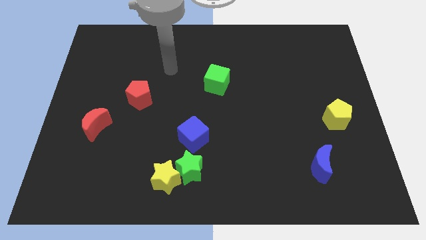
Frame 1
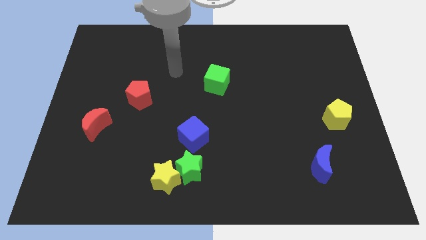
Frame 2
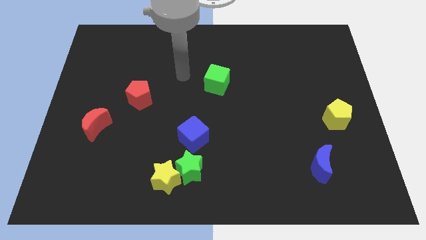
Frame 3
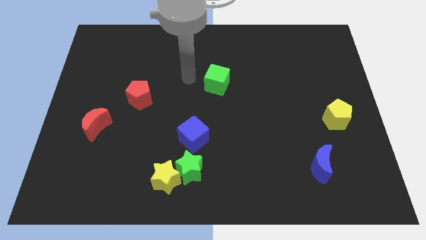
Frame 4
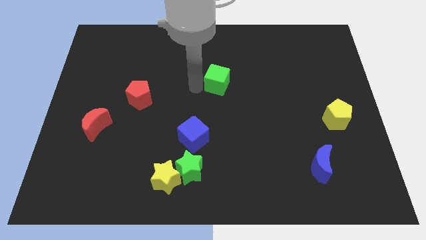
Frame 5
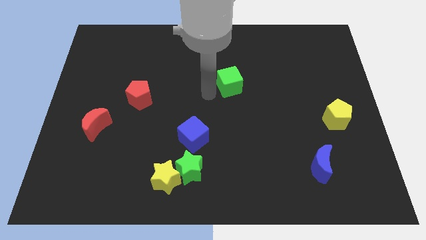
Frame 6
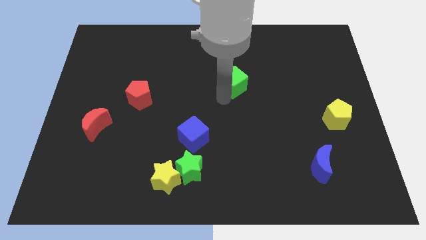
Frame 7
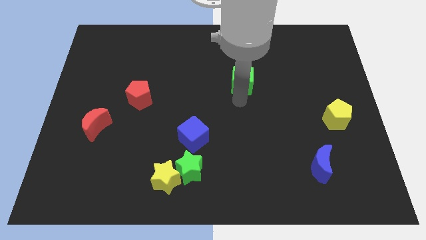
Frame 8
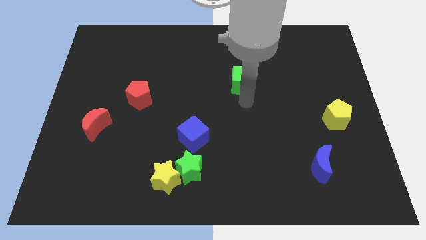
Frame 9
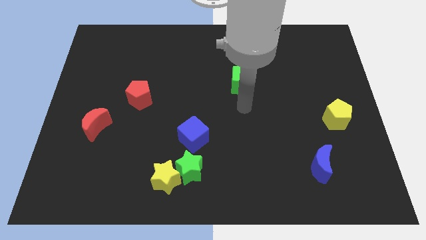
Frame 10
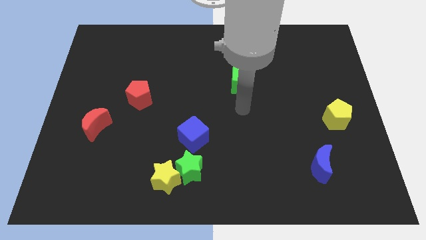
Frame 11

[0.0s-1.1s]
slightly push the green cube towards the right side of the board

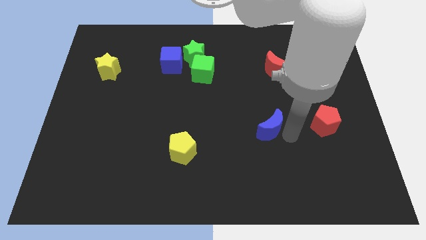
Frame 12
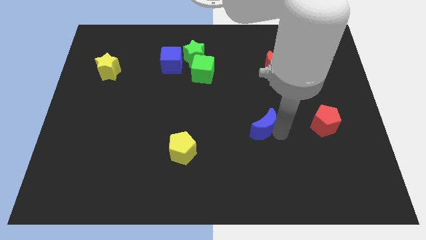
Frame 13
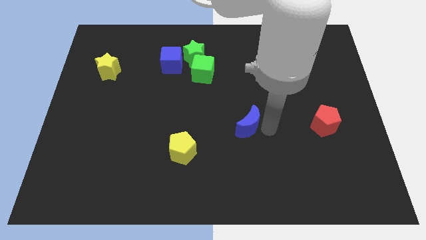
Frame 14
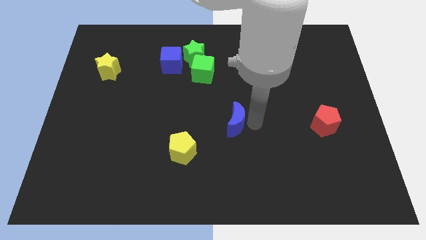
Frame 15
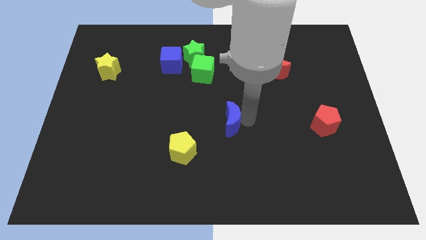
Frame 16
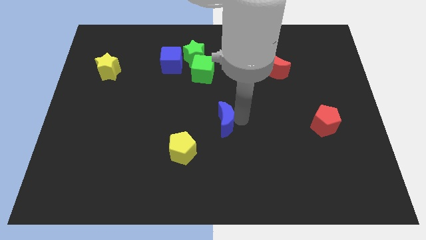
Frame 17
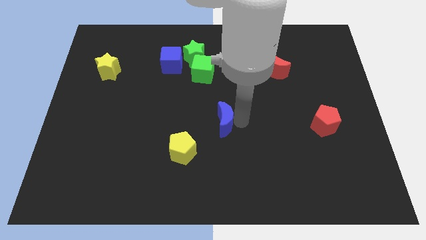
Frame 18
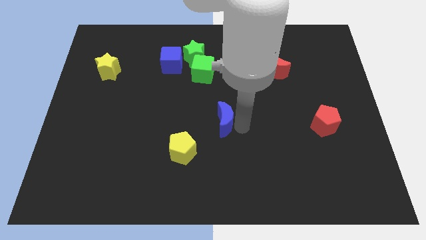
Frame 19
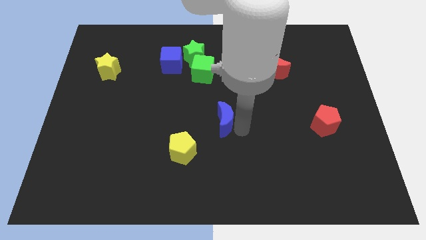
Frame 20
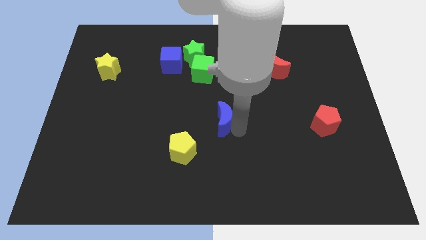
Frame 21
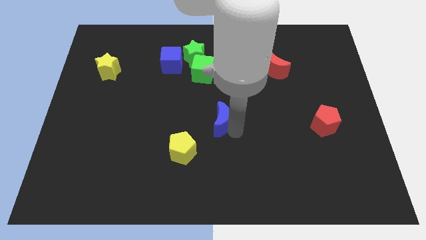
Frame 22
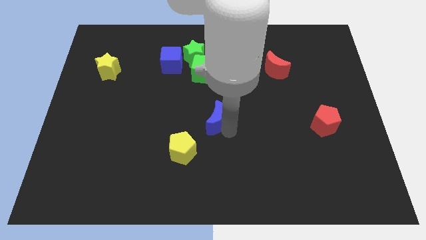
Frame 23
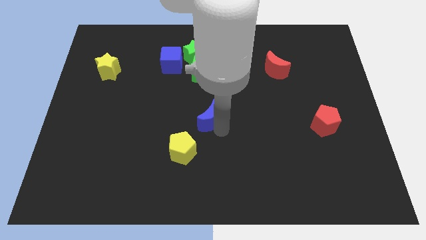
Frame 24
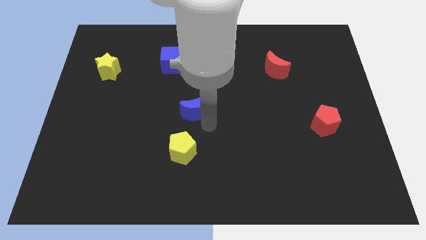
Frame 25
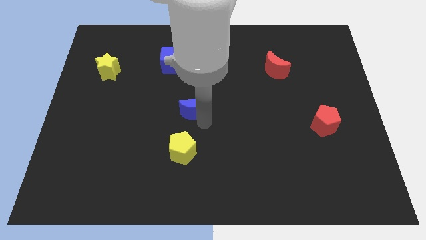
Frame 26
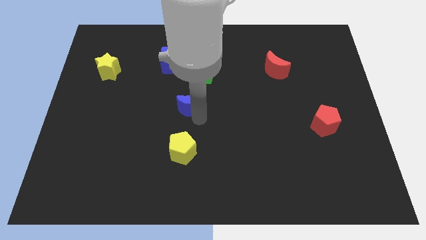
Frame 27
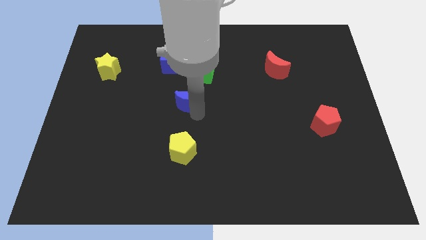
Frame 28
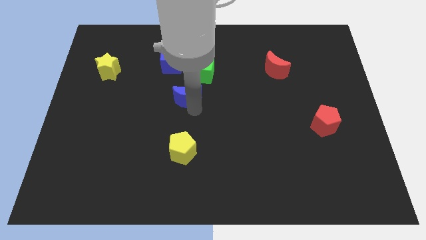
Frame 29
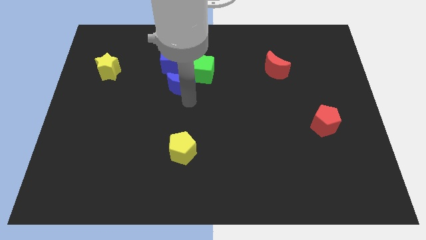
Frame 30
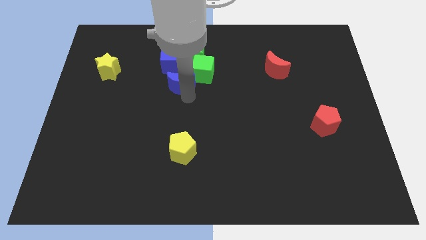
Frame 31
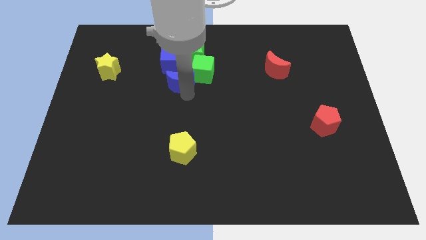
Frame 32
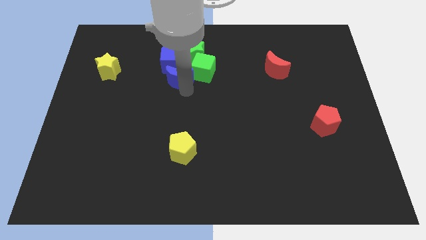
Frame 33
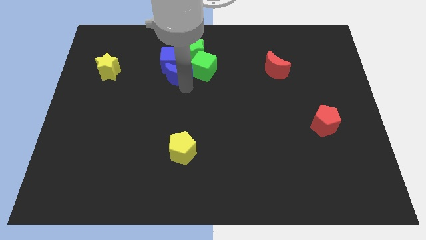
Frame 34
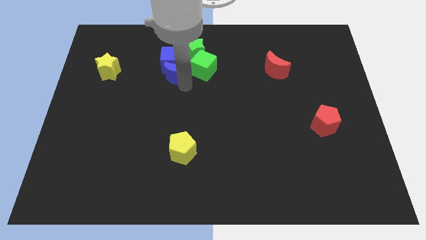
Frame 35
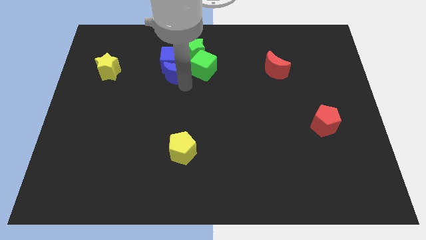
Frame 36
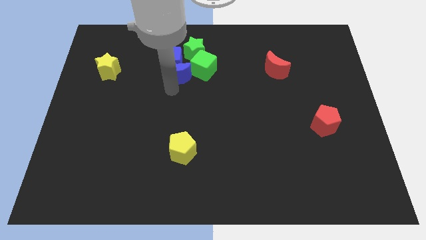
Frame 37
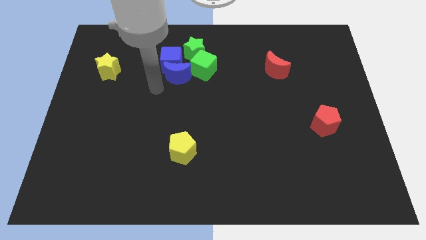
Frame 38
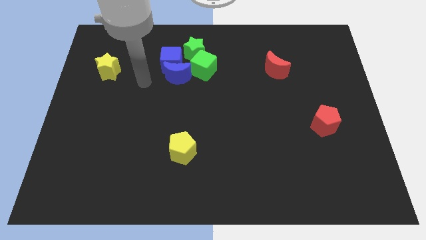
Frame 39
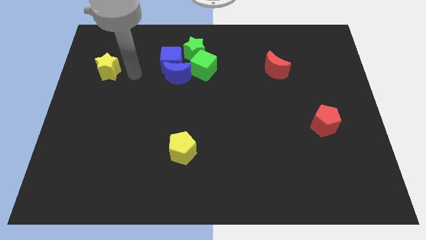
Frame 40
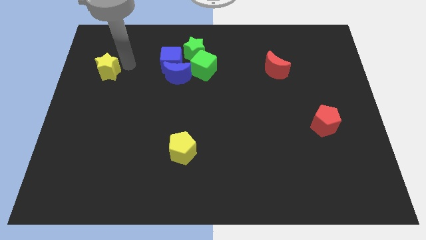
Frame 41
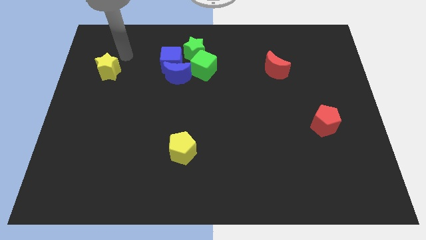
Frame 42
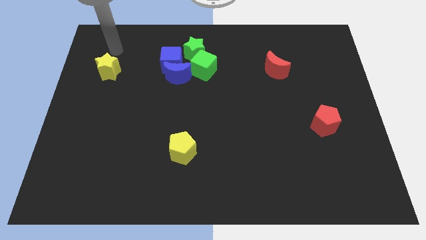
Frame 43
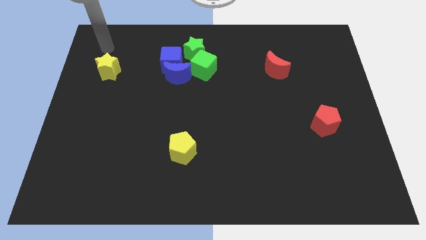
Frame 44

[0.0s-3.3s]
push the blue crescent into the blue cube

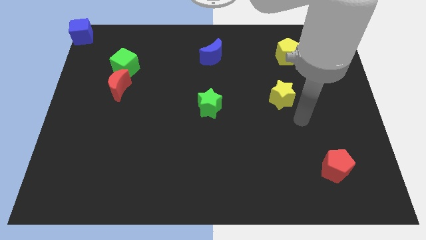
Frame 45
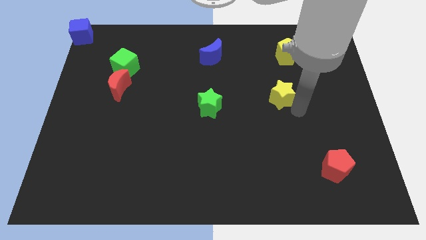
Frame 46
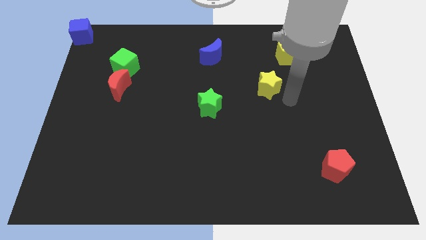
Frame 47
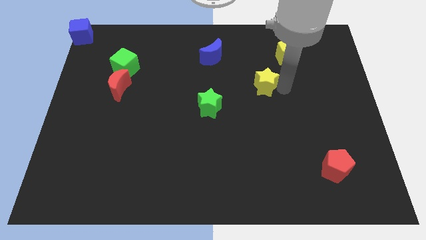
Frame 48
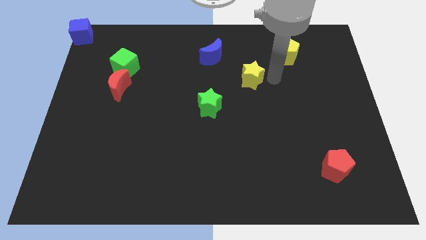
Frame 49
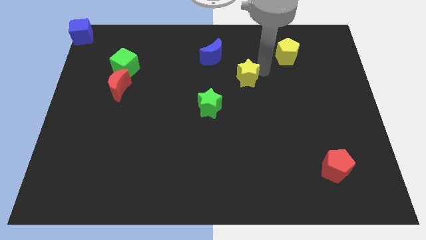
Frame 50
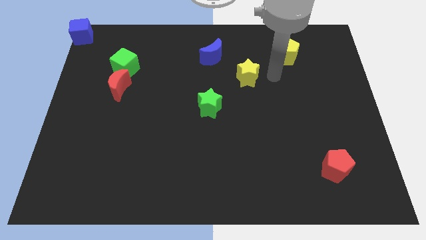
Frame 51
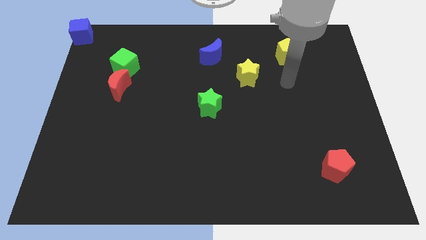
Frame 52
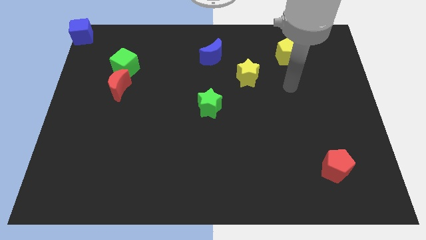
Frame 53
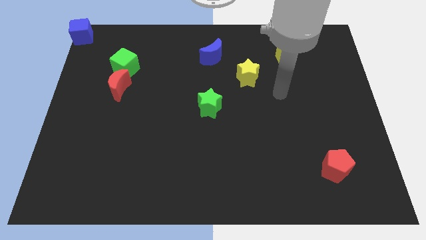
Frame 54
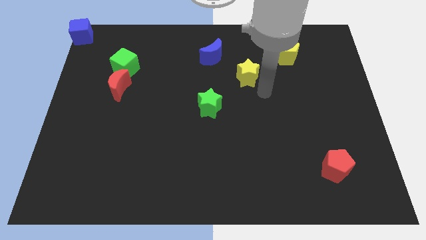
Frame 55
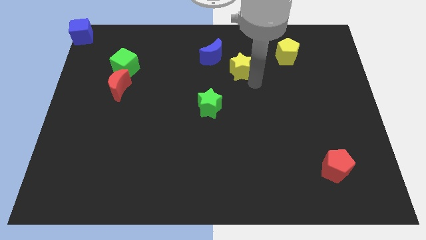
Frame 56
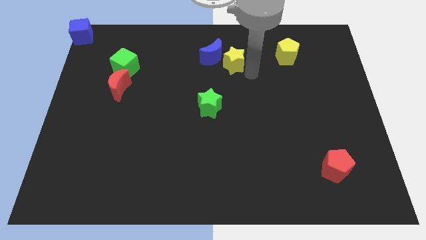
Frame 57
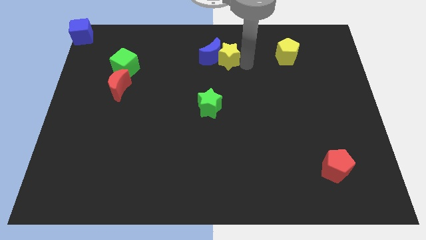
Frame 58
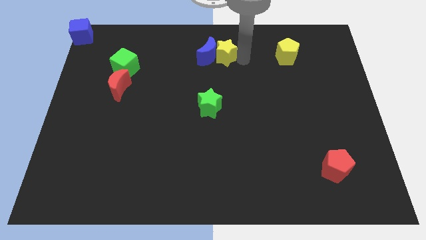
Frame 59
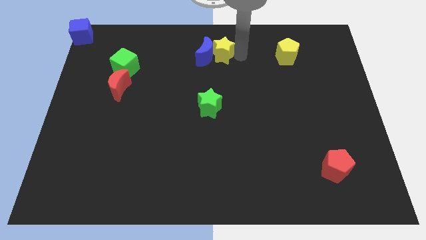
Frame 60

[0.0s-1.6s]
push yellow star beside blue crescent

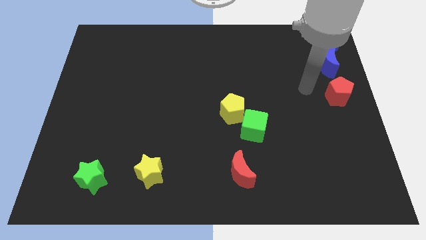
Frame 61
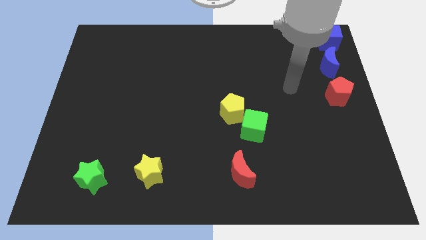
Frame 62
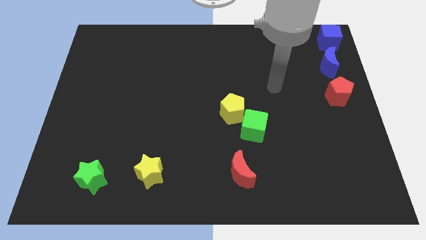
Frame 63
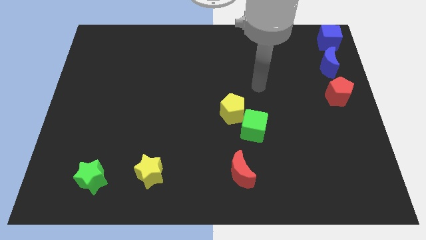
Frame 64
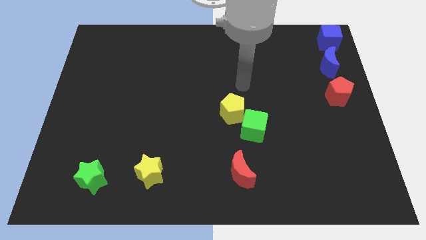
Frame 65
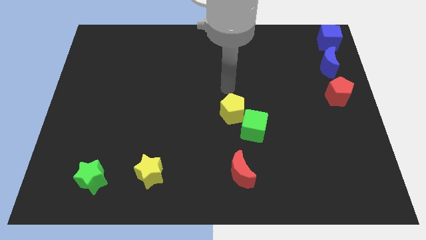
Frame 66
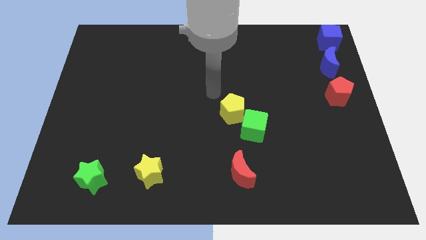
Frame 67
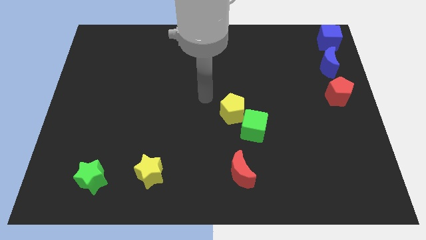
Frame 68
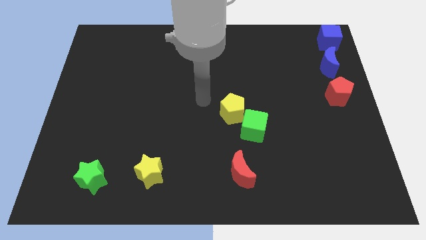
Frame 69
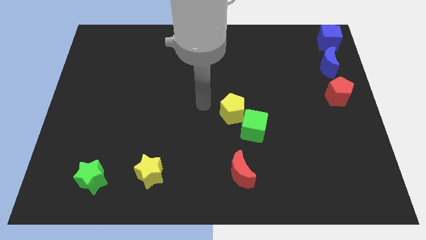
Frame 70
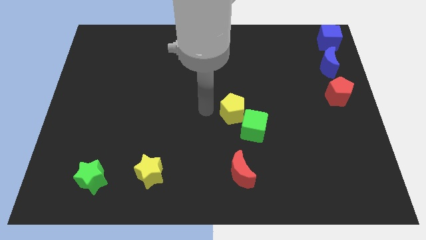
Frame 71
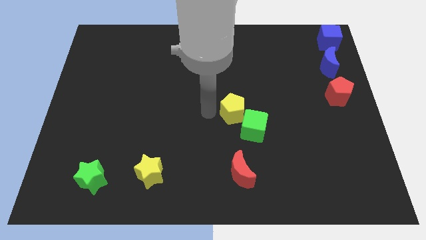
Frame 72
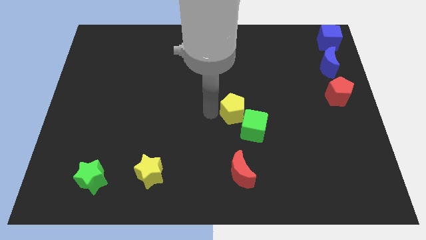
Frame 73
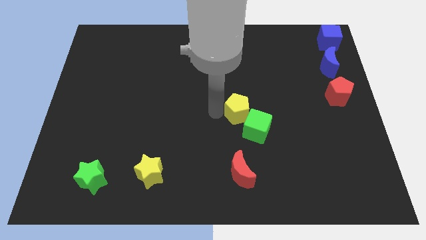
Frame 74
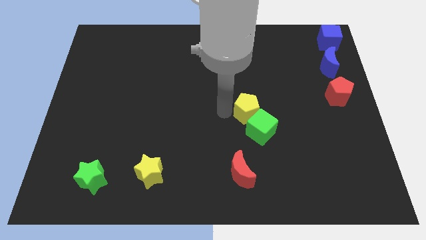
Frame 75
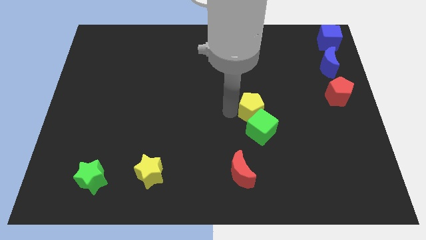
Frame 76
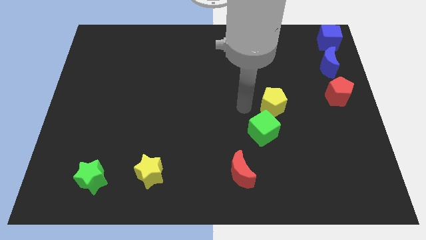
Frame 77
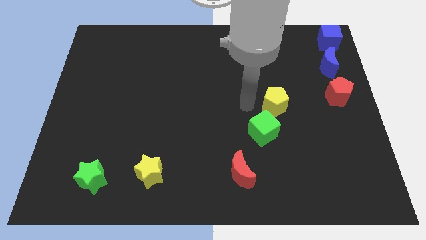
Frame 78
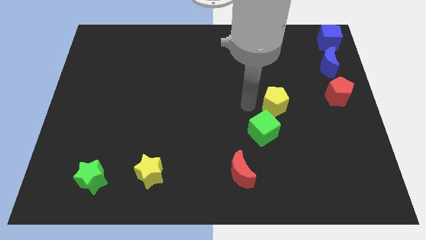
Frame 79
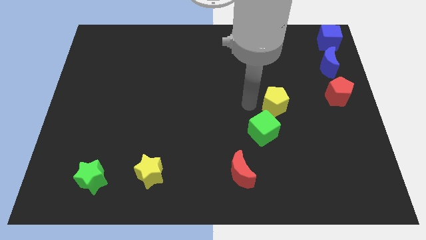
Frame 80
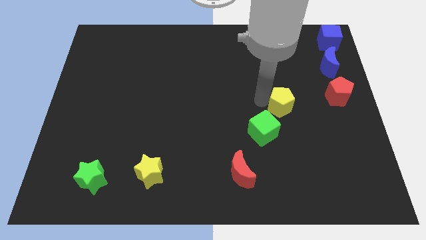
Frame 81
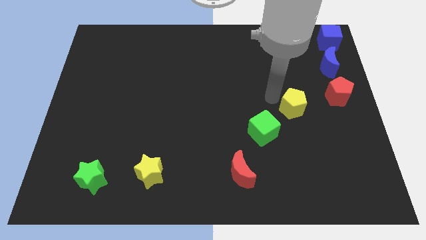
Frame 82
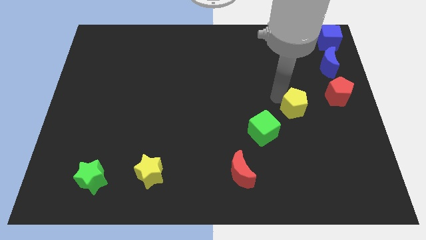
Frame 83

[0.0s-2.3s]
separate the yellow pentagon from the green cube

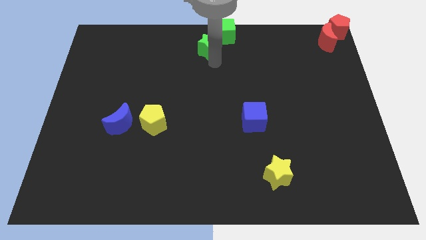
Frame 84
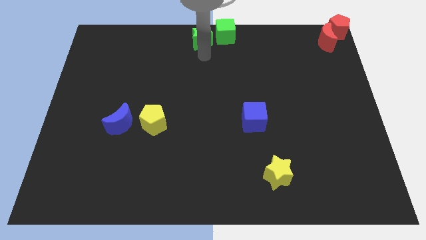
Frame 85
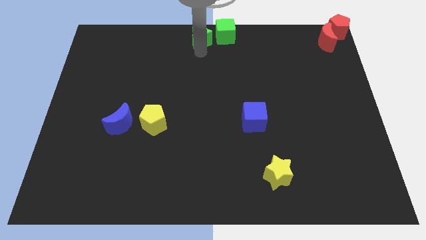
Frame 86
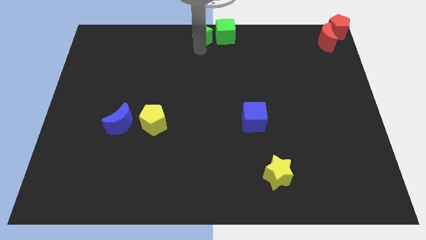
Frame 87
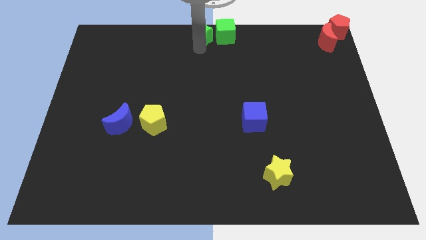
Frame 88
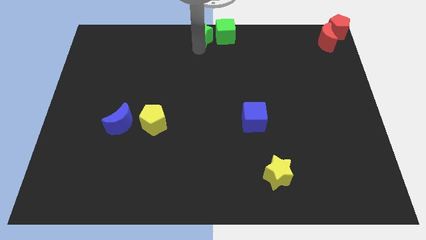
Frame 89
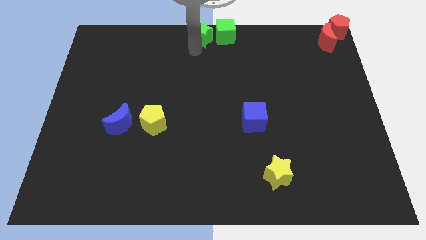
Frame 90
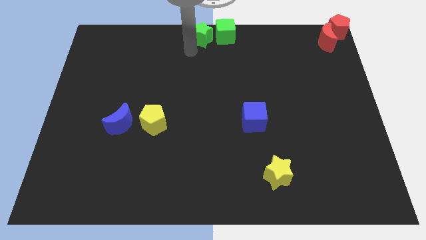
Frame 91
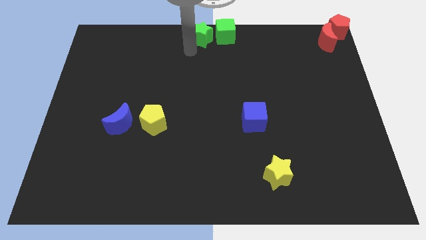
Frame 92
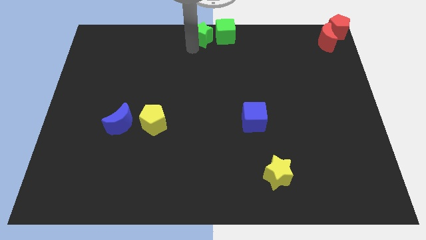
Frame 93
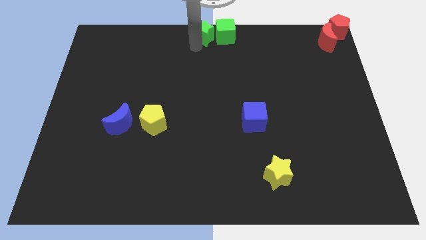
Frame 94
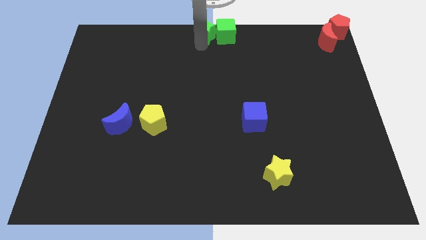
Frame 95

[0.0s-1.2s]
place the green star beside the green cube
